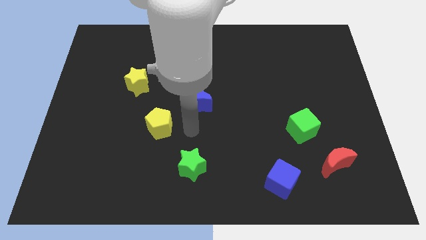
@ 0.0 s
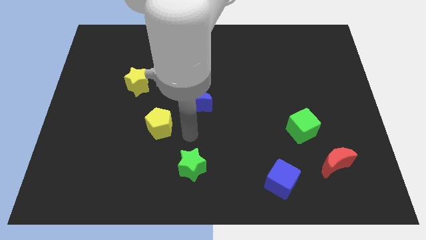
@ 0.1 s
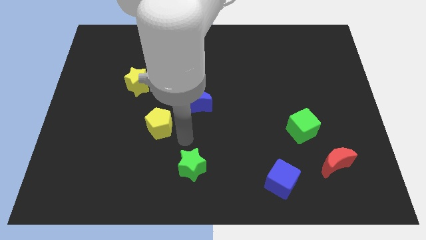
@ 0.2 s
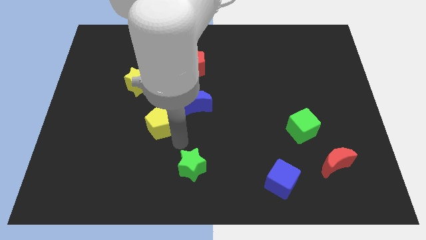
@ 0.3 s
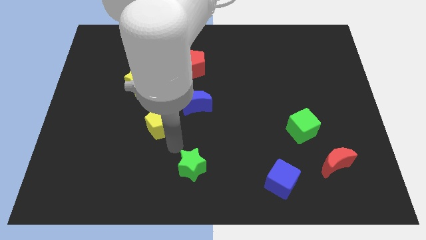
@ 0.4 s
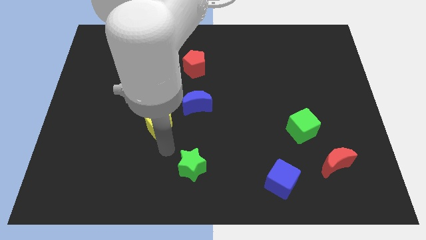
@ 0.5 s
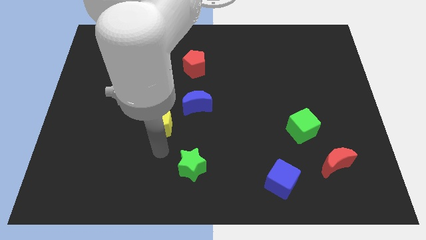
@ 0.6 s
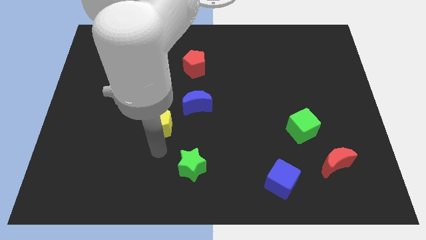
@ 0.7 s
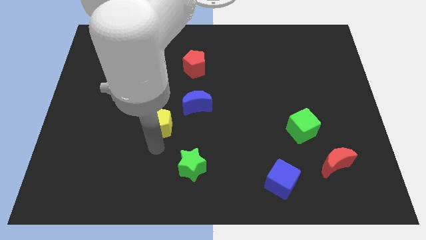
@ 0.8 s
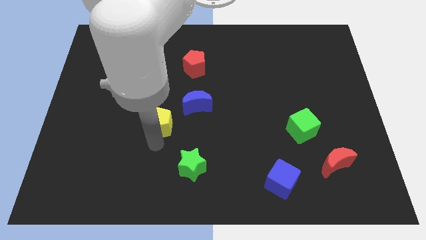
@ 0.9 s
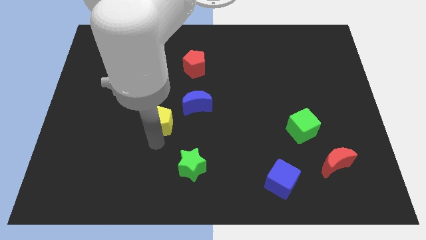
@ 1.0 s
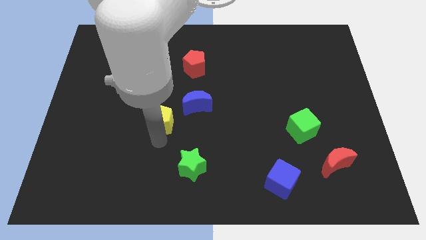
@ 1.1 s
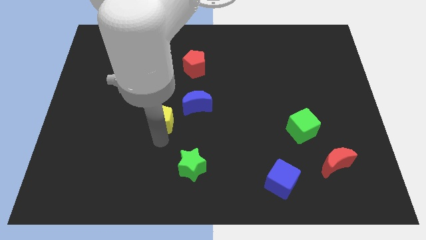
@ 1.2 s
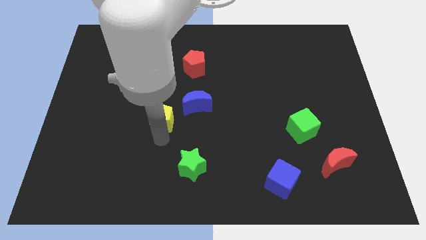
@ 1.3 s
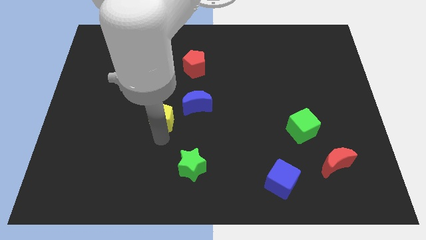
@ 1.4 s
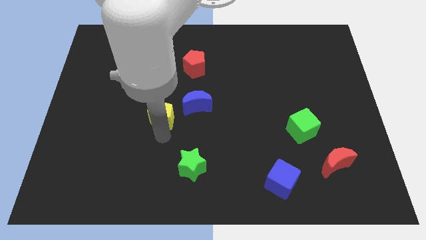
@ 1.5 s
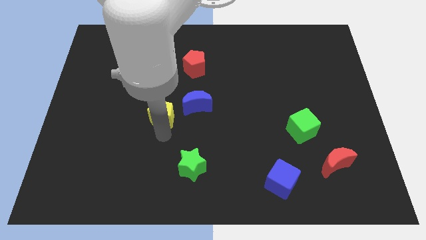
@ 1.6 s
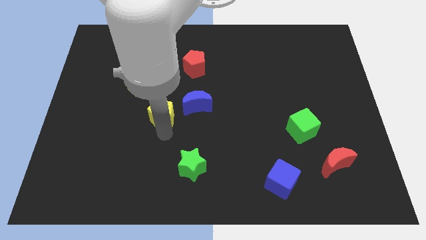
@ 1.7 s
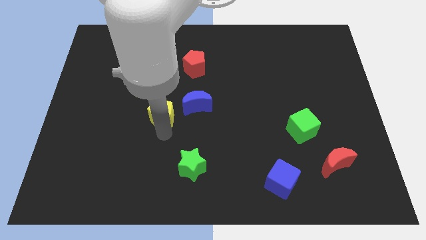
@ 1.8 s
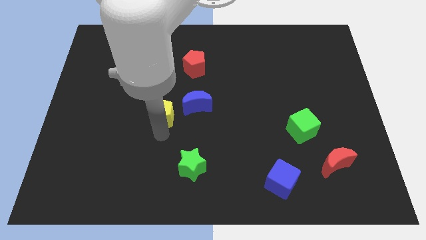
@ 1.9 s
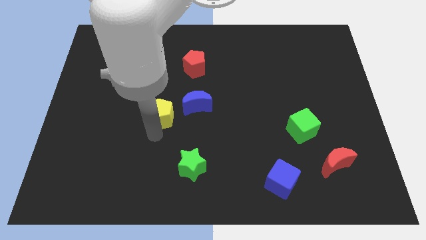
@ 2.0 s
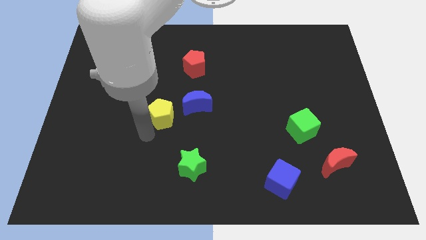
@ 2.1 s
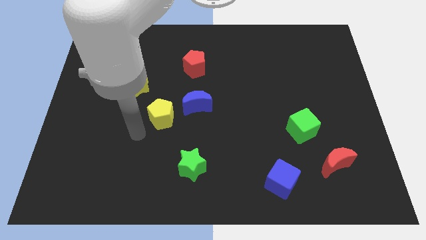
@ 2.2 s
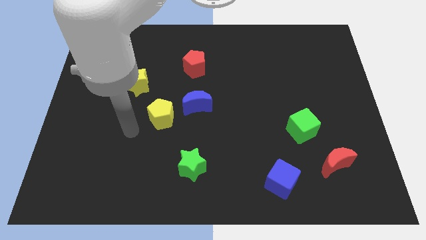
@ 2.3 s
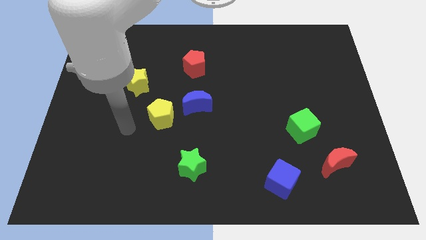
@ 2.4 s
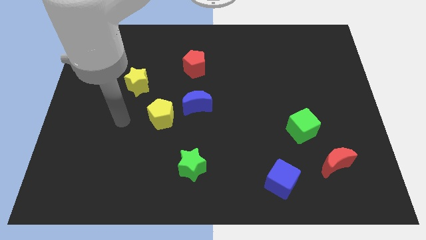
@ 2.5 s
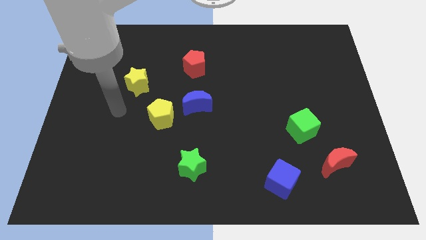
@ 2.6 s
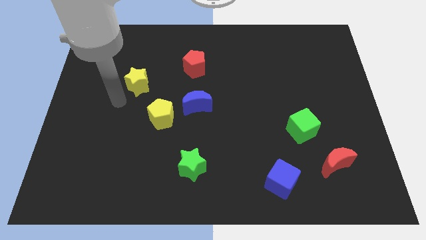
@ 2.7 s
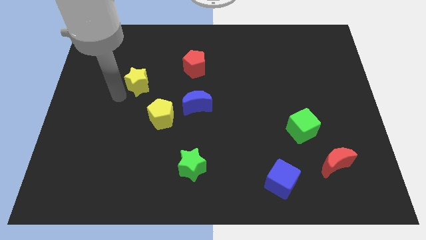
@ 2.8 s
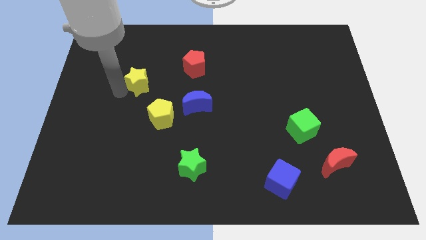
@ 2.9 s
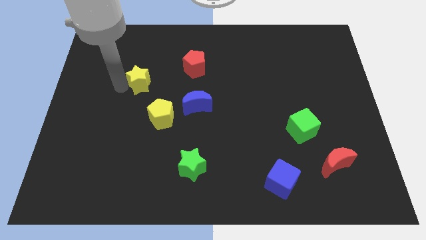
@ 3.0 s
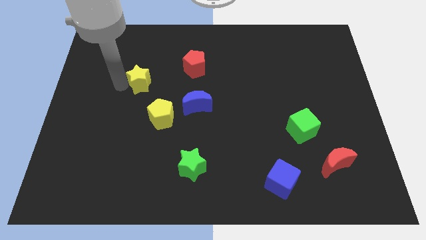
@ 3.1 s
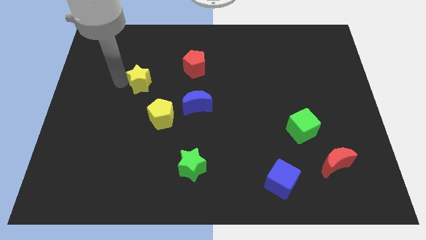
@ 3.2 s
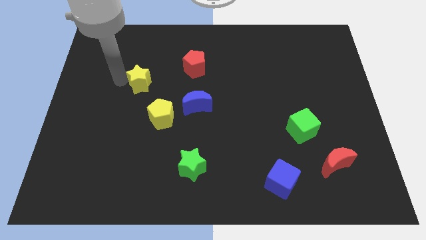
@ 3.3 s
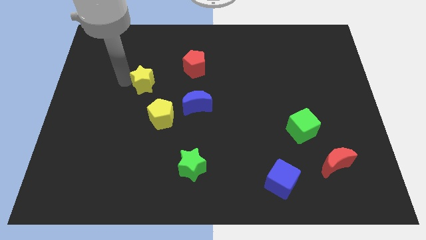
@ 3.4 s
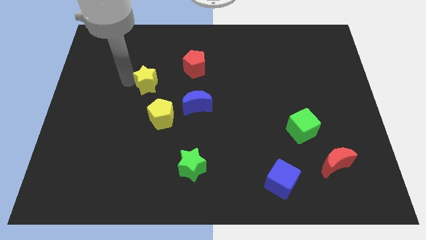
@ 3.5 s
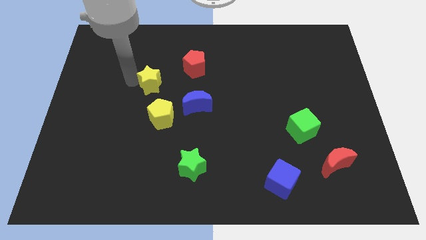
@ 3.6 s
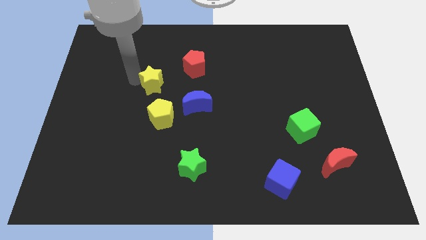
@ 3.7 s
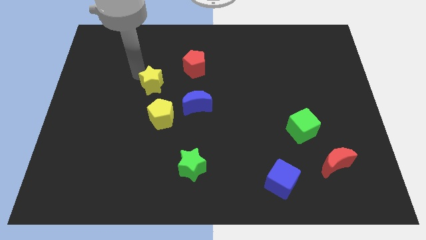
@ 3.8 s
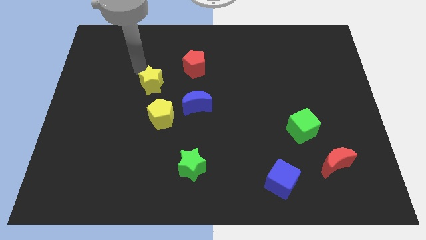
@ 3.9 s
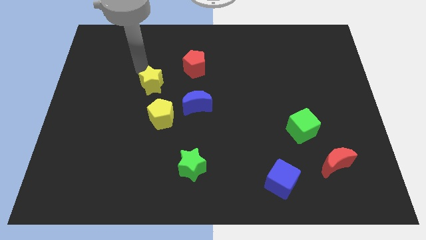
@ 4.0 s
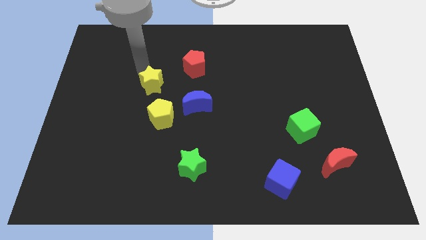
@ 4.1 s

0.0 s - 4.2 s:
place the yellow pentagon to the left side of the blue crescent

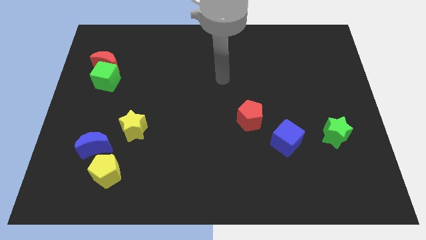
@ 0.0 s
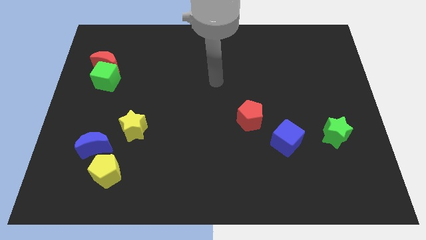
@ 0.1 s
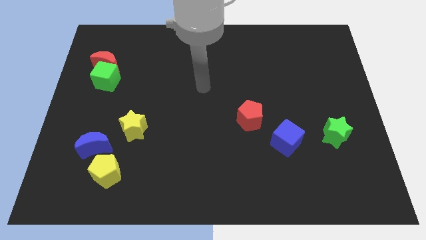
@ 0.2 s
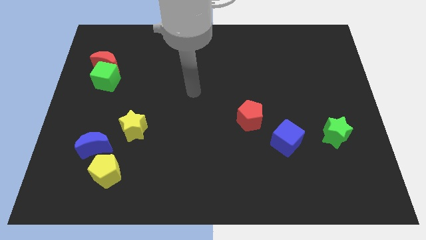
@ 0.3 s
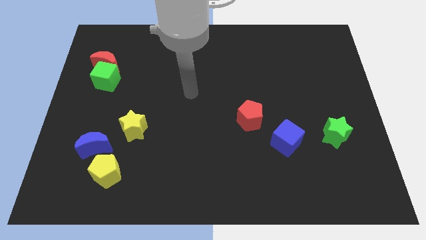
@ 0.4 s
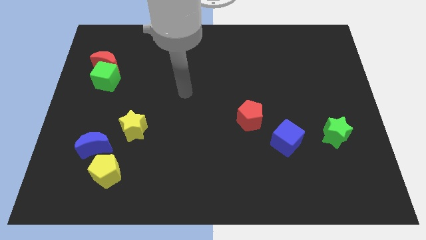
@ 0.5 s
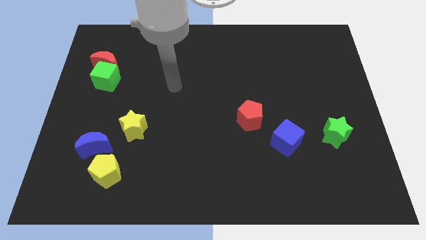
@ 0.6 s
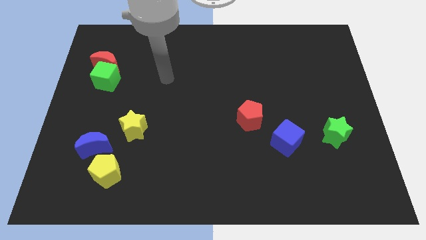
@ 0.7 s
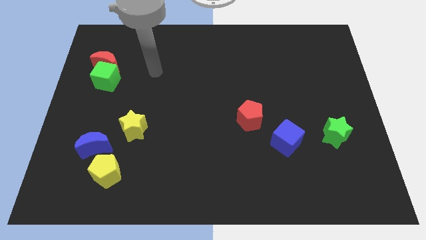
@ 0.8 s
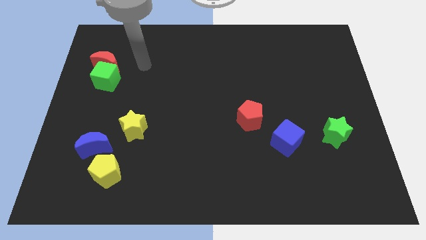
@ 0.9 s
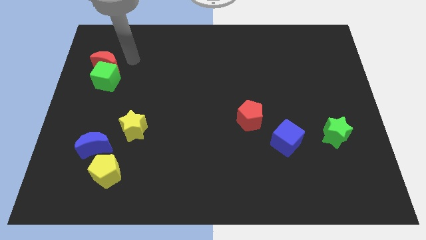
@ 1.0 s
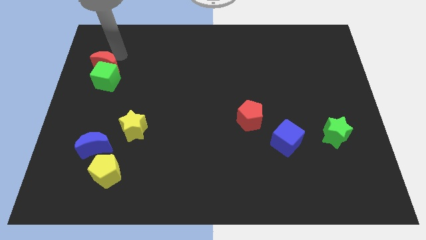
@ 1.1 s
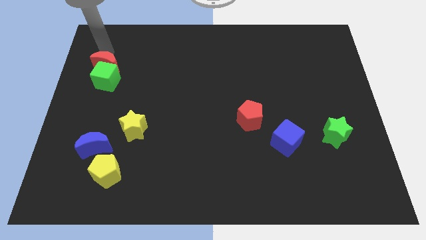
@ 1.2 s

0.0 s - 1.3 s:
point your arm at the top of red moon

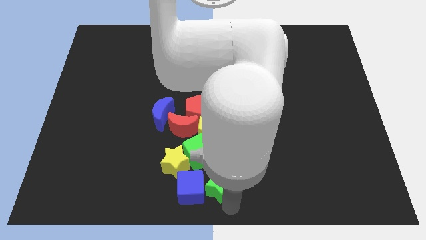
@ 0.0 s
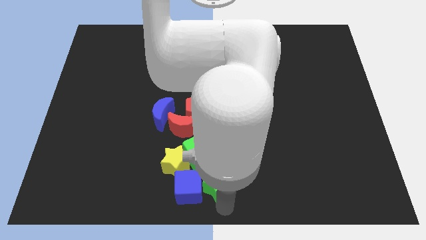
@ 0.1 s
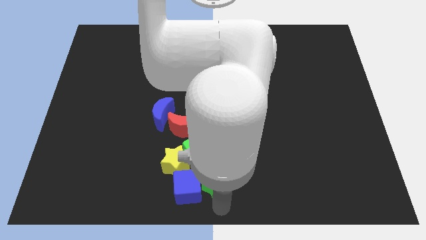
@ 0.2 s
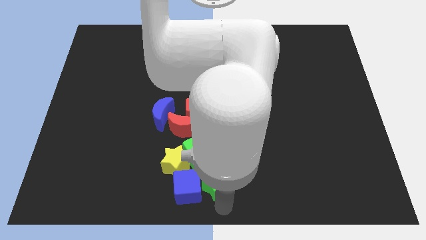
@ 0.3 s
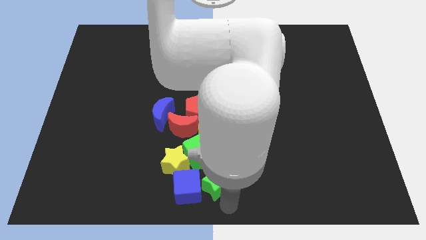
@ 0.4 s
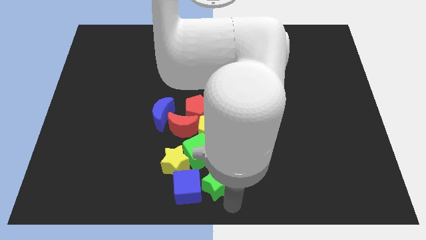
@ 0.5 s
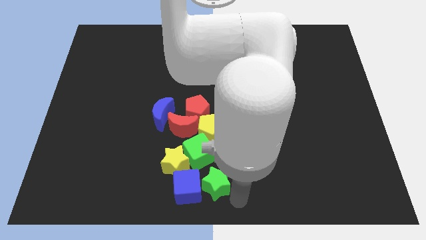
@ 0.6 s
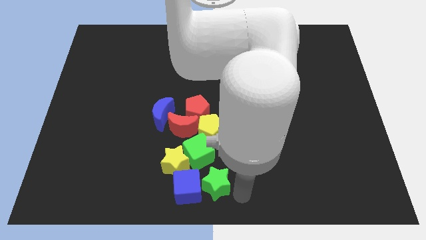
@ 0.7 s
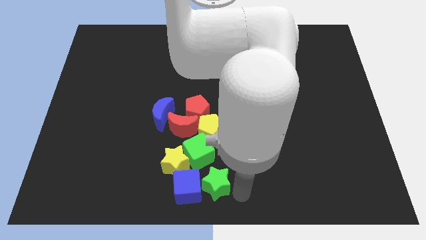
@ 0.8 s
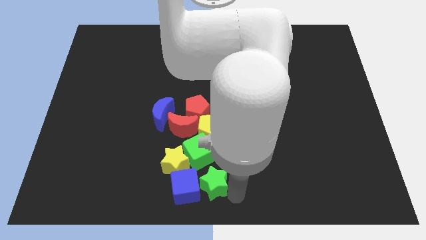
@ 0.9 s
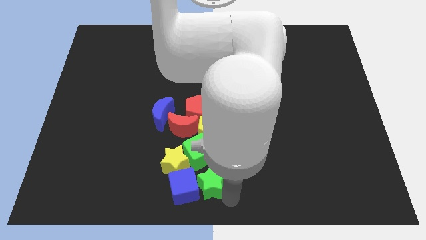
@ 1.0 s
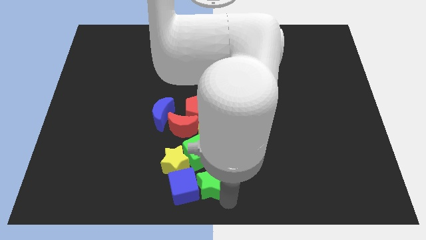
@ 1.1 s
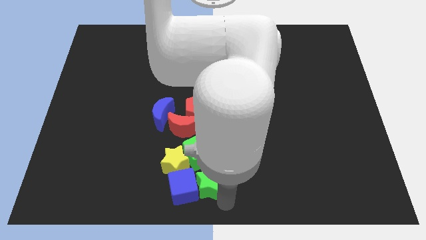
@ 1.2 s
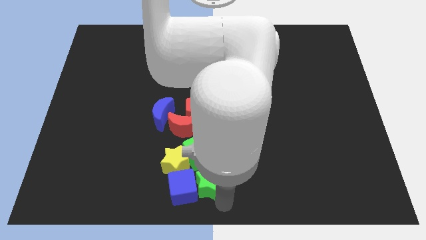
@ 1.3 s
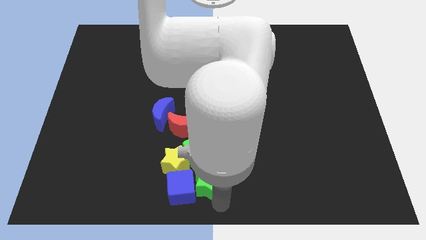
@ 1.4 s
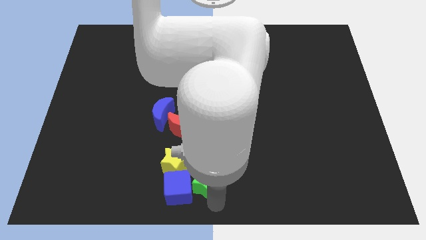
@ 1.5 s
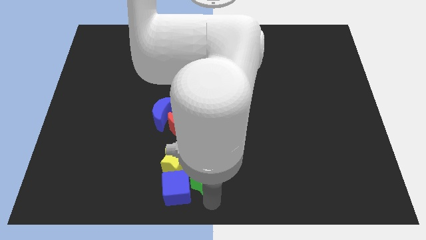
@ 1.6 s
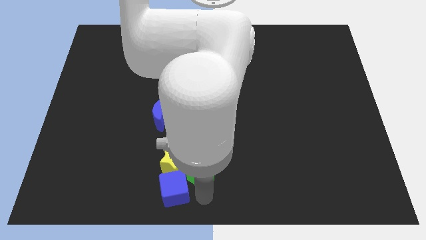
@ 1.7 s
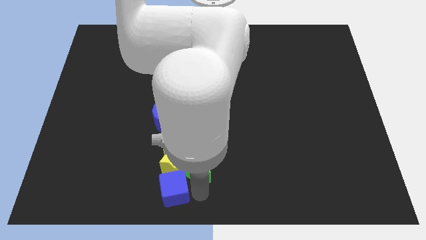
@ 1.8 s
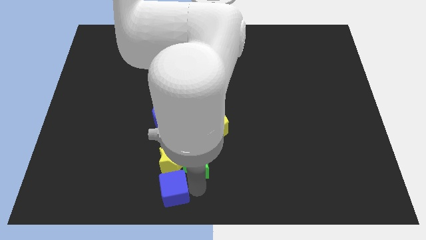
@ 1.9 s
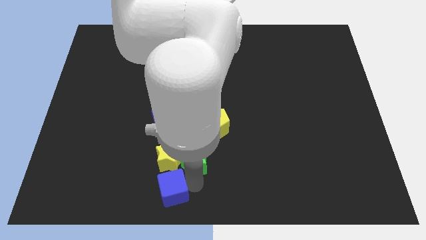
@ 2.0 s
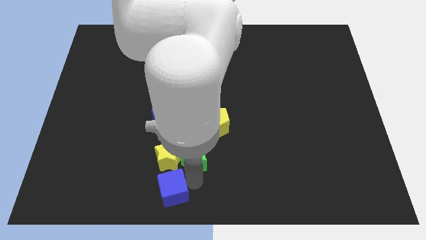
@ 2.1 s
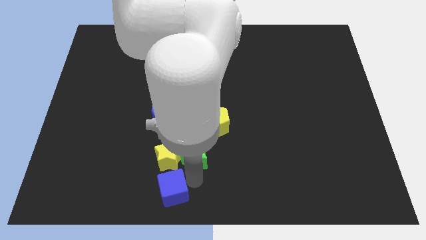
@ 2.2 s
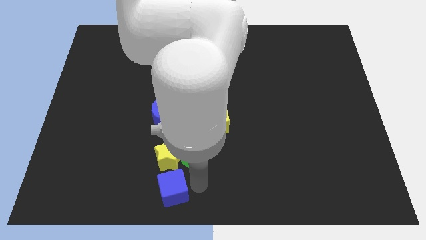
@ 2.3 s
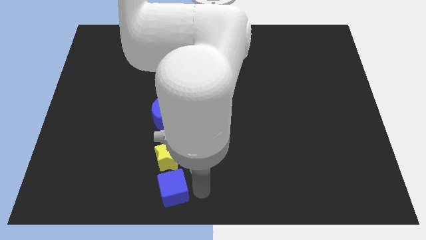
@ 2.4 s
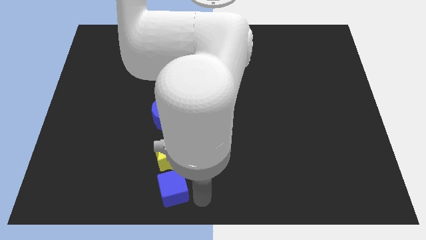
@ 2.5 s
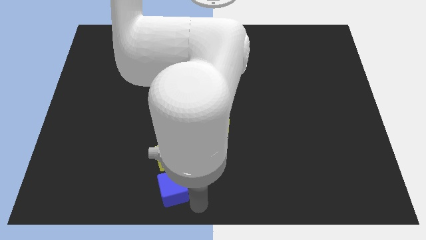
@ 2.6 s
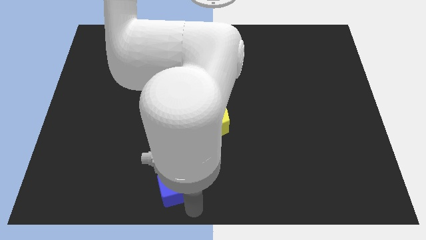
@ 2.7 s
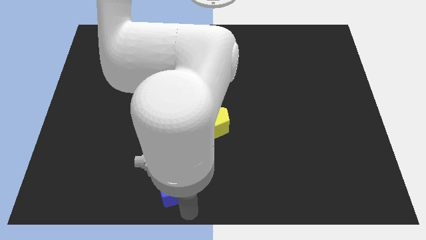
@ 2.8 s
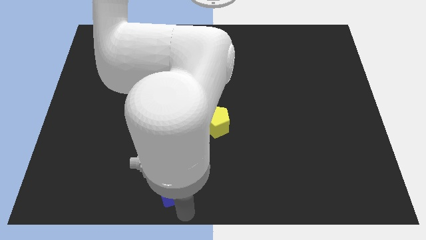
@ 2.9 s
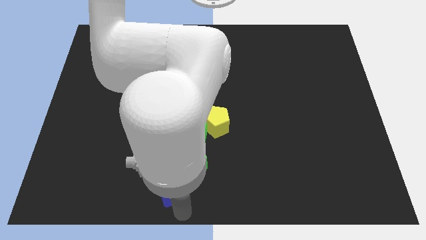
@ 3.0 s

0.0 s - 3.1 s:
move the green star slightly towards the green cube

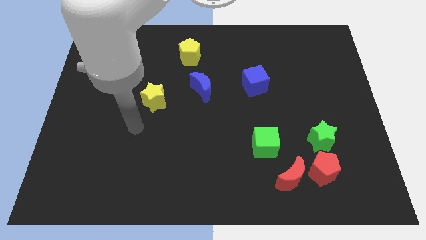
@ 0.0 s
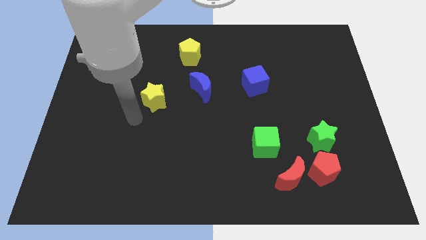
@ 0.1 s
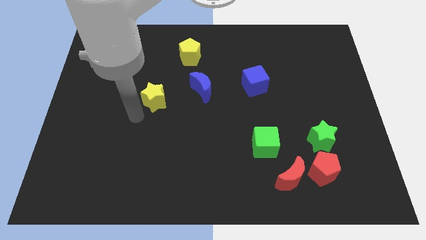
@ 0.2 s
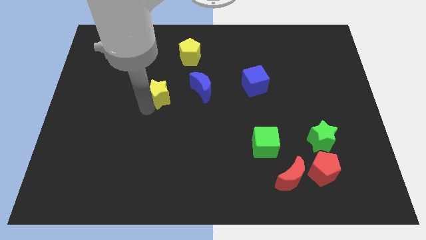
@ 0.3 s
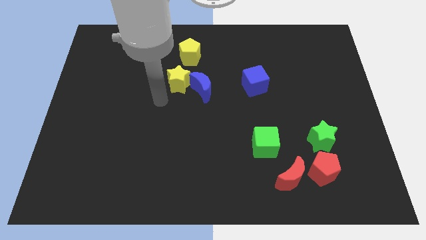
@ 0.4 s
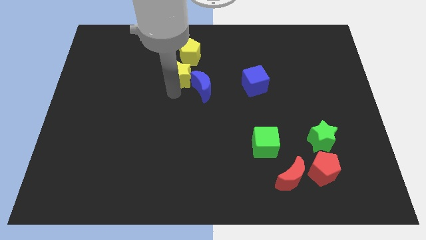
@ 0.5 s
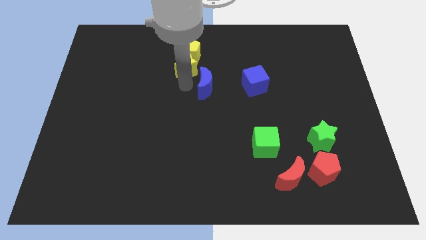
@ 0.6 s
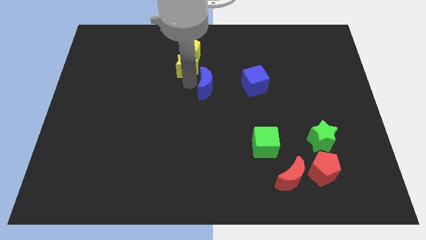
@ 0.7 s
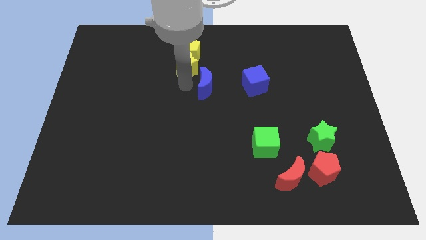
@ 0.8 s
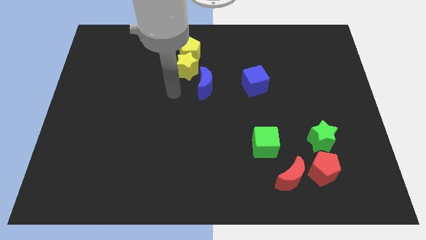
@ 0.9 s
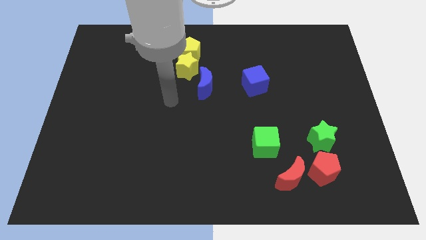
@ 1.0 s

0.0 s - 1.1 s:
push the yellow star into the yellow pentagon
